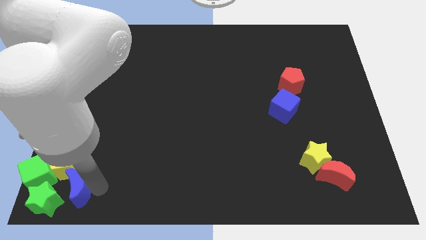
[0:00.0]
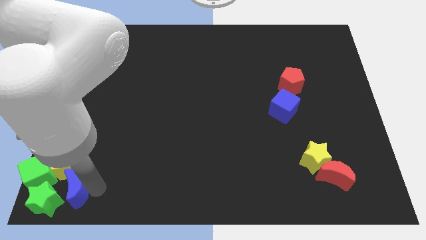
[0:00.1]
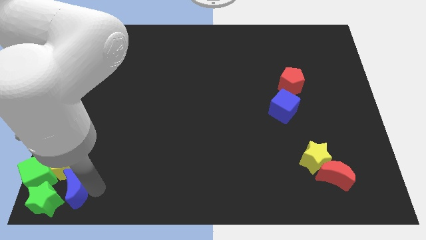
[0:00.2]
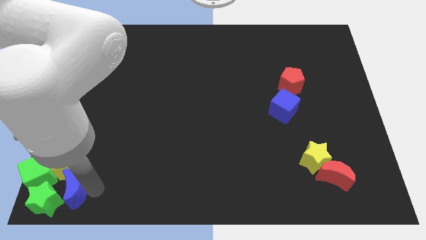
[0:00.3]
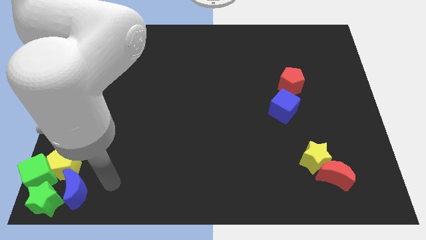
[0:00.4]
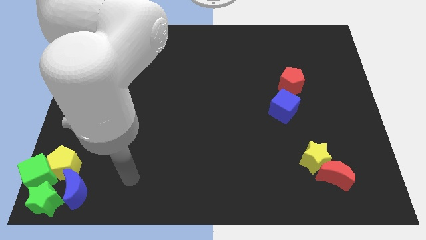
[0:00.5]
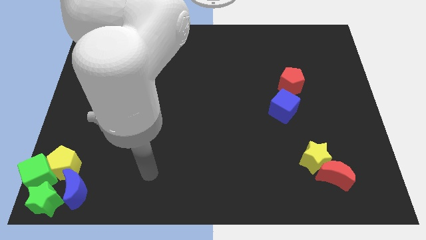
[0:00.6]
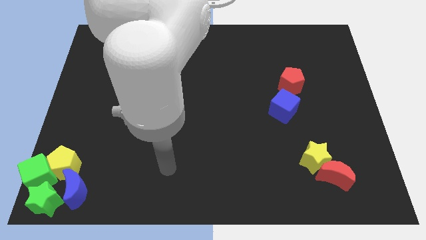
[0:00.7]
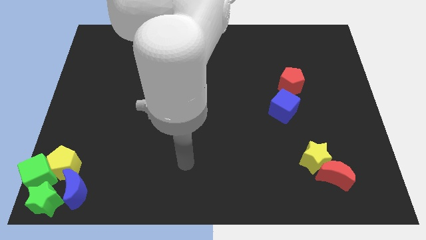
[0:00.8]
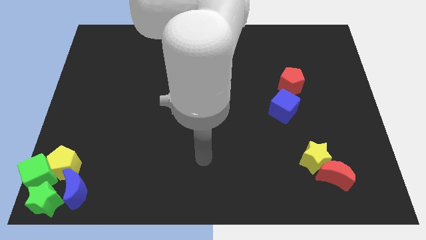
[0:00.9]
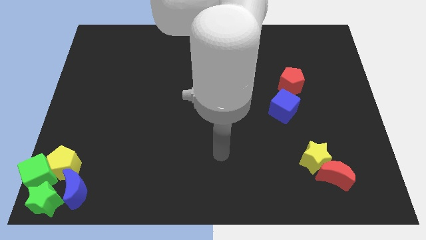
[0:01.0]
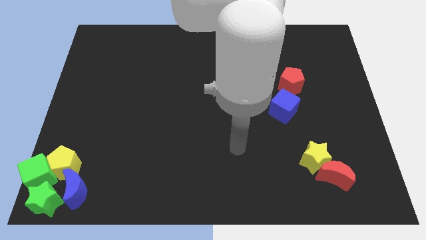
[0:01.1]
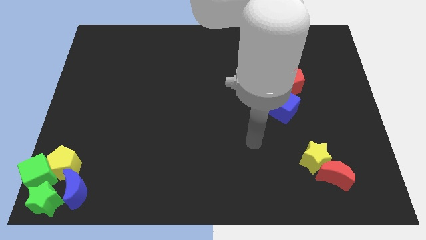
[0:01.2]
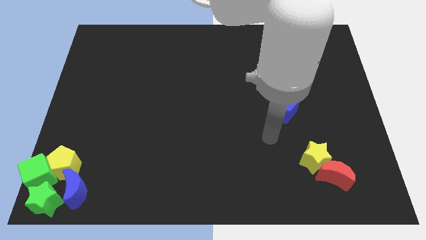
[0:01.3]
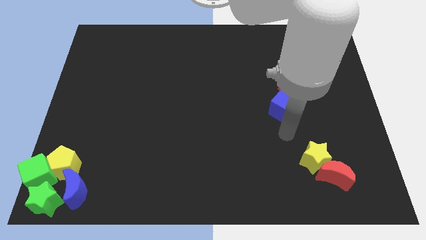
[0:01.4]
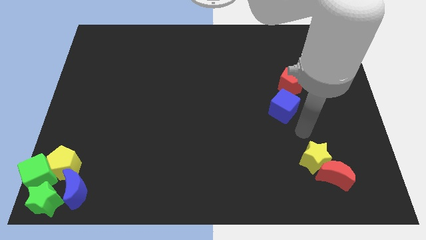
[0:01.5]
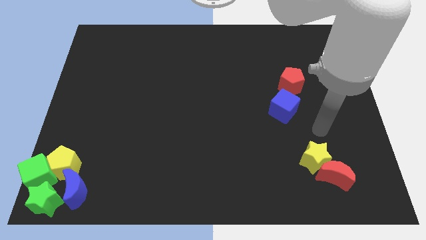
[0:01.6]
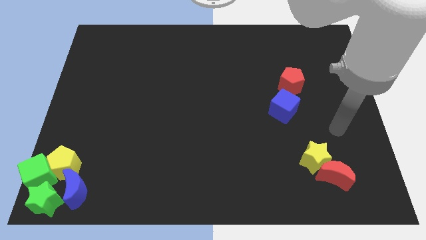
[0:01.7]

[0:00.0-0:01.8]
move your arm away from the blue crescent

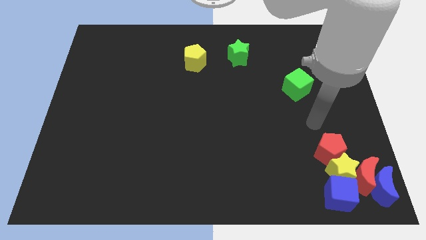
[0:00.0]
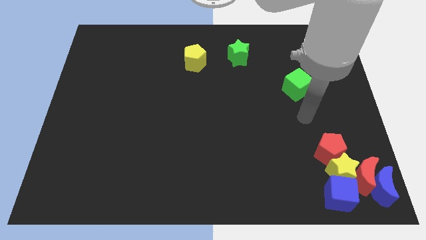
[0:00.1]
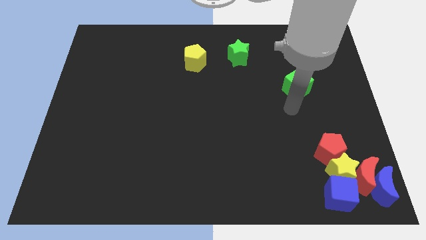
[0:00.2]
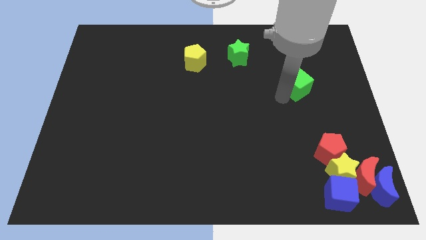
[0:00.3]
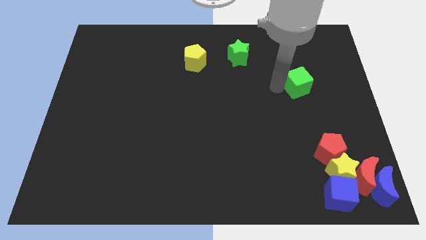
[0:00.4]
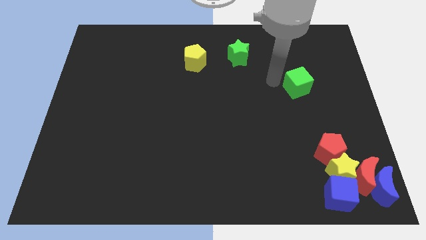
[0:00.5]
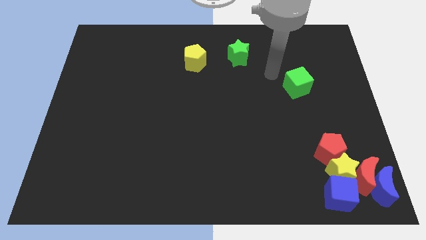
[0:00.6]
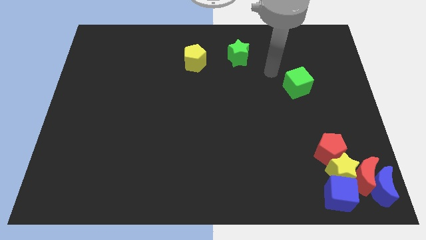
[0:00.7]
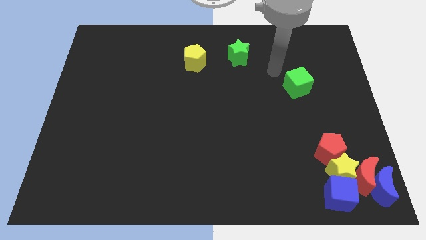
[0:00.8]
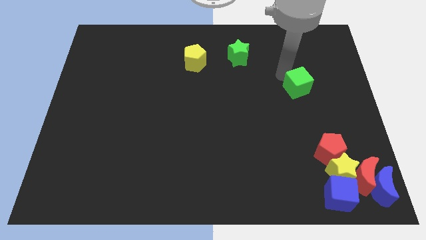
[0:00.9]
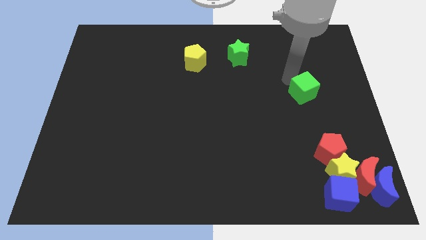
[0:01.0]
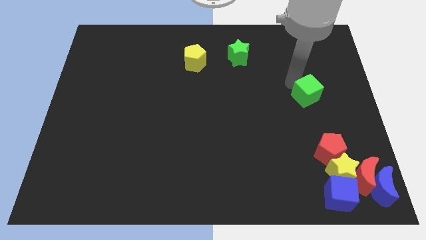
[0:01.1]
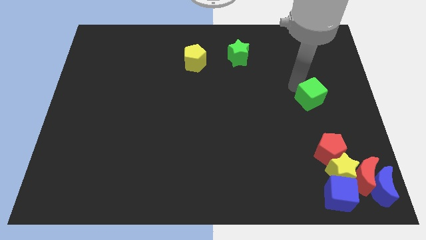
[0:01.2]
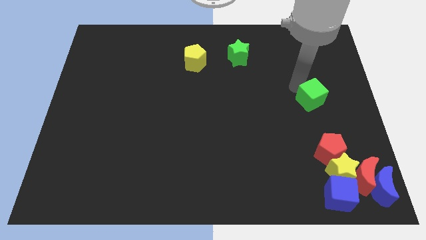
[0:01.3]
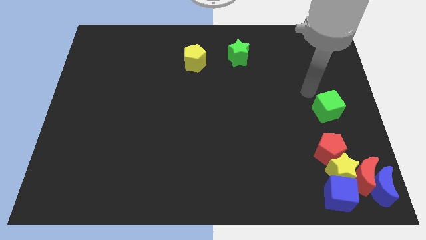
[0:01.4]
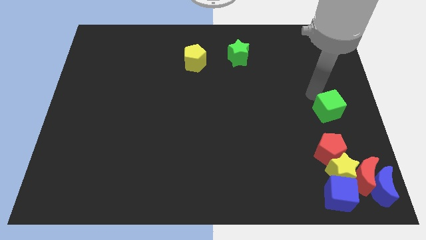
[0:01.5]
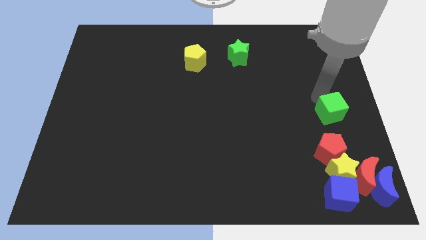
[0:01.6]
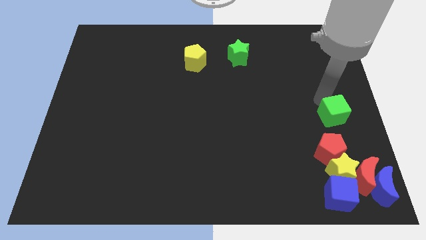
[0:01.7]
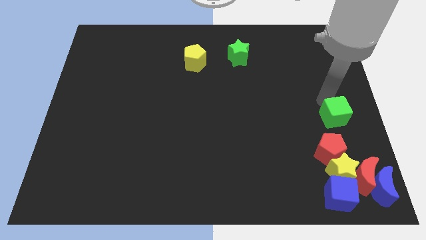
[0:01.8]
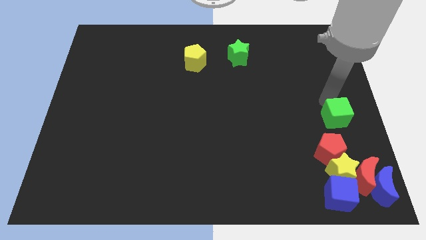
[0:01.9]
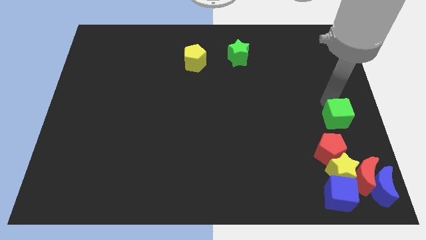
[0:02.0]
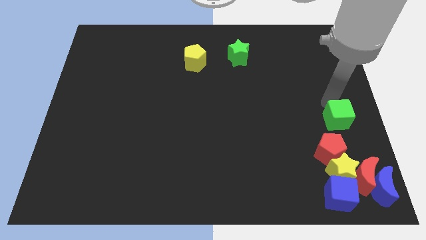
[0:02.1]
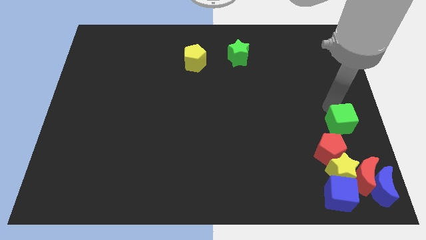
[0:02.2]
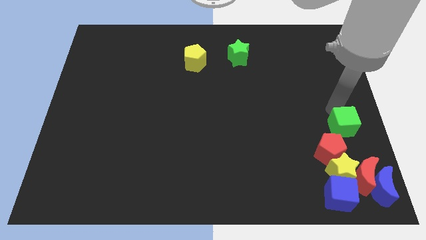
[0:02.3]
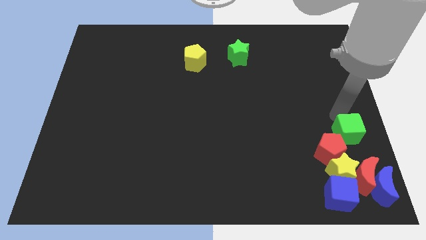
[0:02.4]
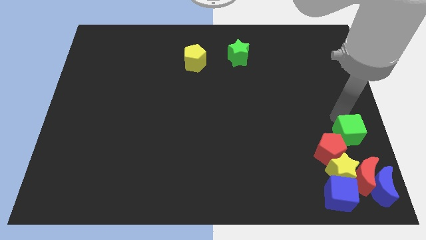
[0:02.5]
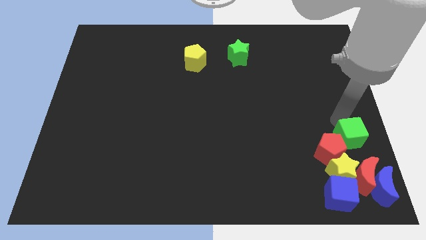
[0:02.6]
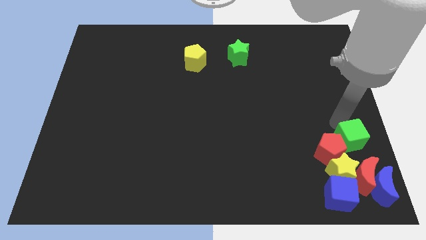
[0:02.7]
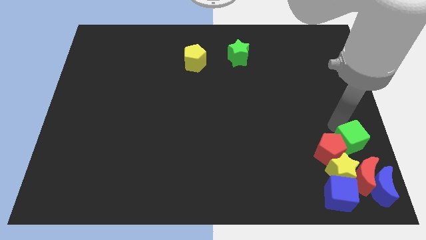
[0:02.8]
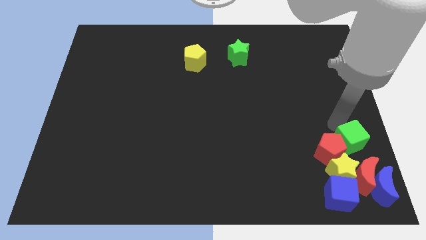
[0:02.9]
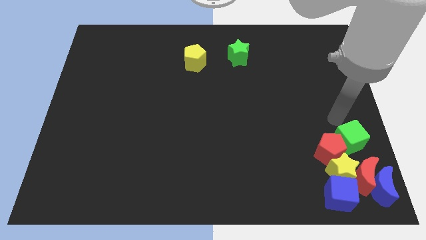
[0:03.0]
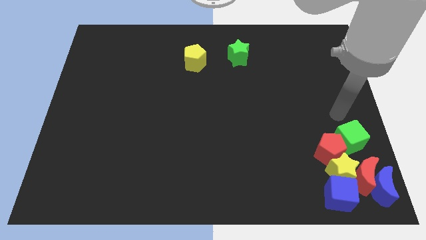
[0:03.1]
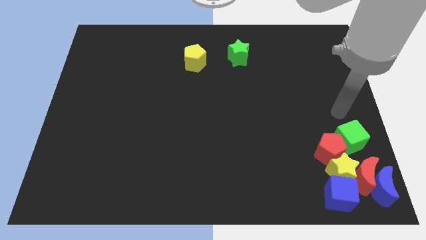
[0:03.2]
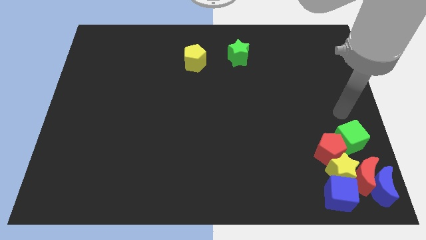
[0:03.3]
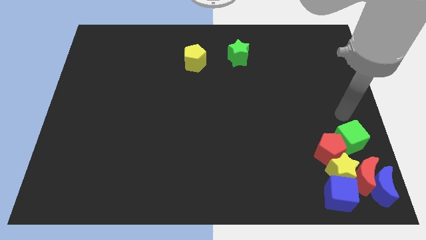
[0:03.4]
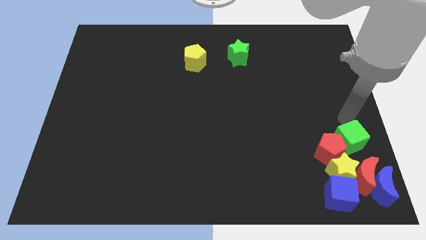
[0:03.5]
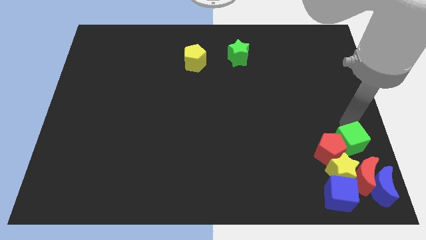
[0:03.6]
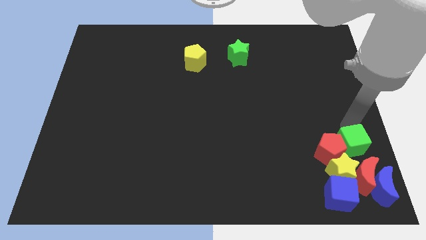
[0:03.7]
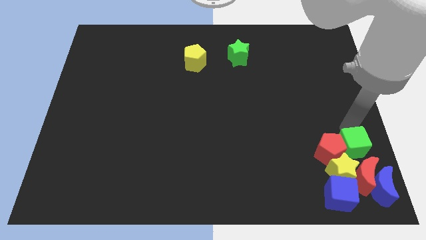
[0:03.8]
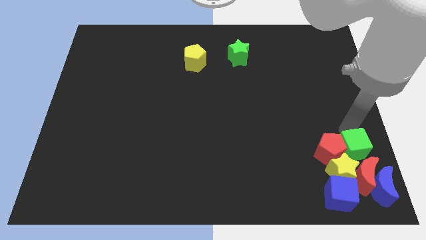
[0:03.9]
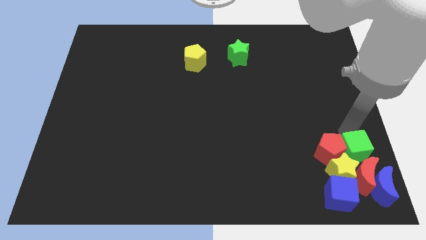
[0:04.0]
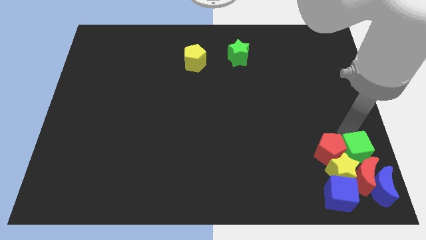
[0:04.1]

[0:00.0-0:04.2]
slide green cube to the right of red pentagon

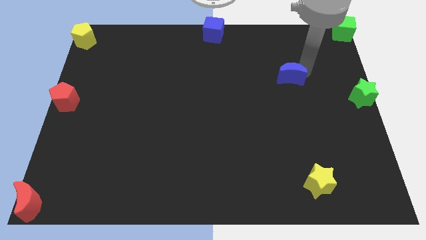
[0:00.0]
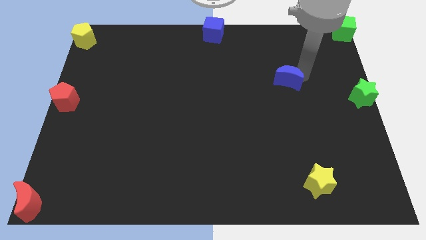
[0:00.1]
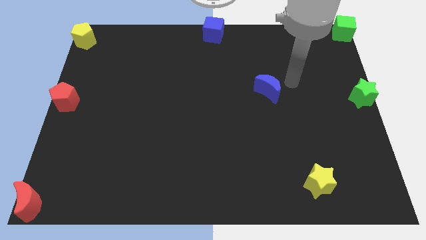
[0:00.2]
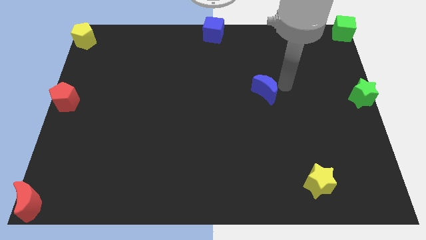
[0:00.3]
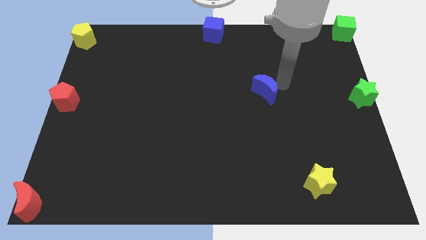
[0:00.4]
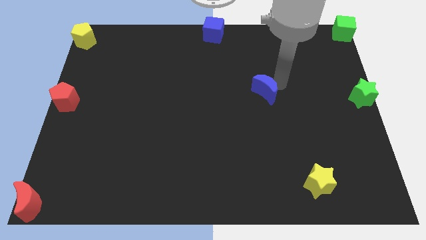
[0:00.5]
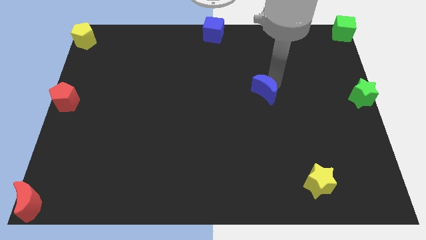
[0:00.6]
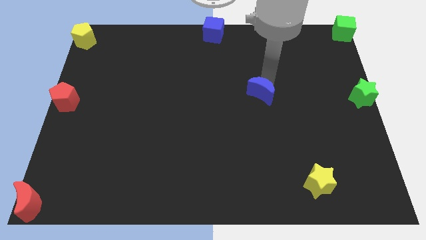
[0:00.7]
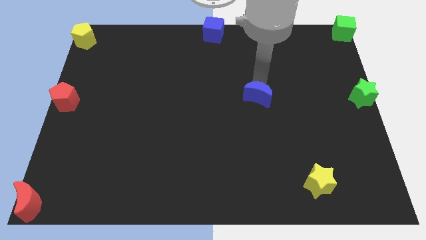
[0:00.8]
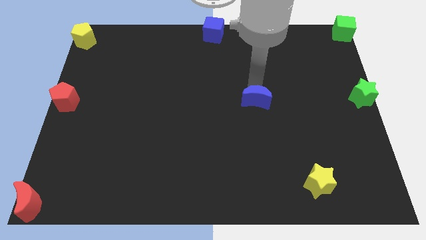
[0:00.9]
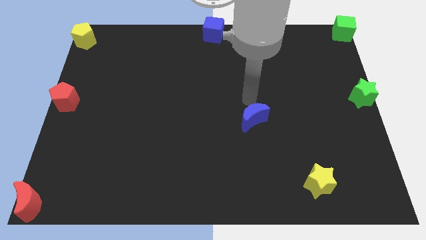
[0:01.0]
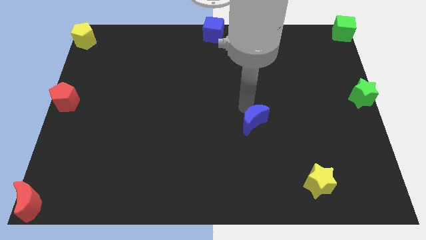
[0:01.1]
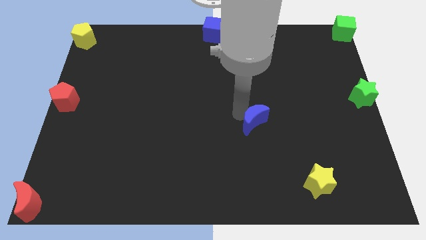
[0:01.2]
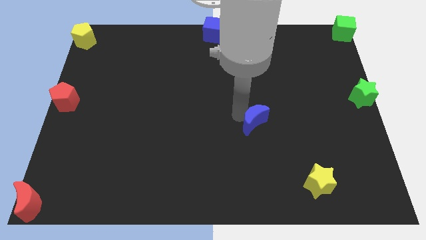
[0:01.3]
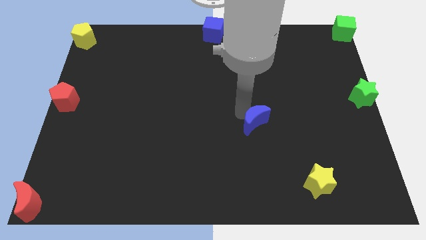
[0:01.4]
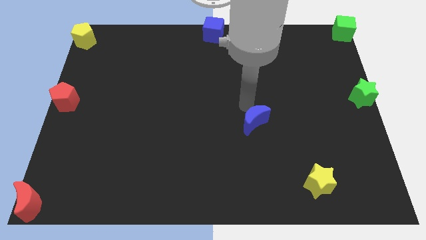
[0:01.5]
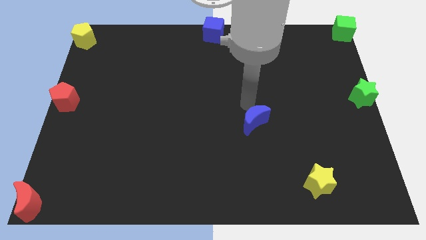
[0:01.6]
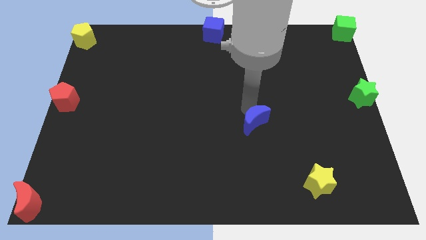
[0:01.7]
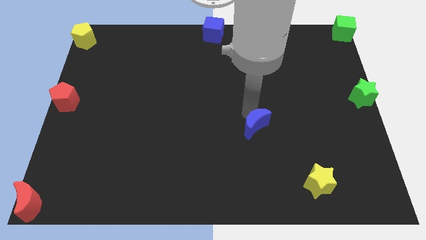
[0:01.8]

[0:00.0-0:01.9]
push blue crescent above yellow star

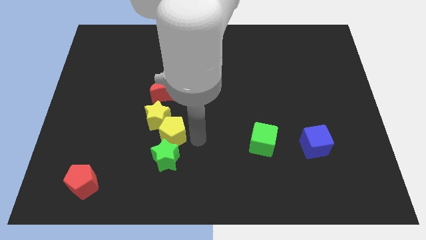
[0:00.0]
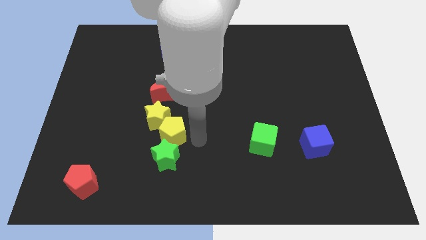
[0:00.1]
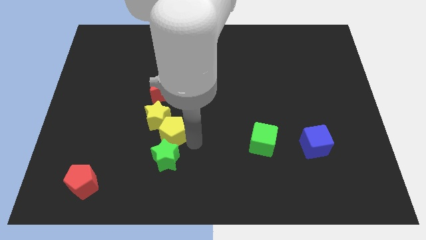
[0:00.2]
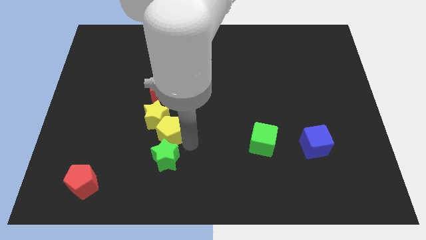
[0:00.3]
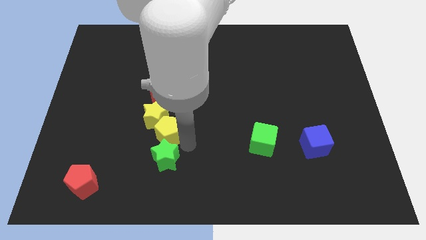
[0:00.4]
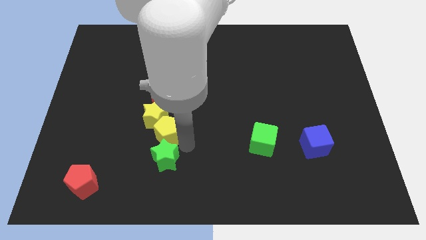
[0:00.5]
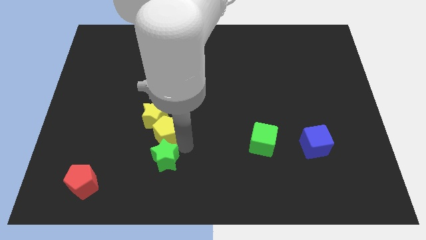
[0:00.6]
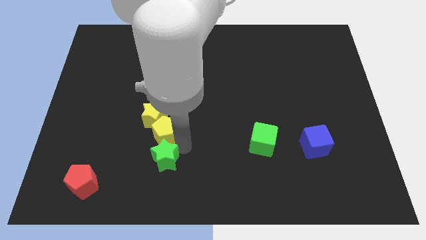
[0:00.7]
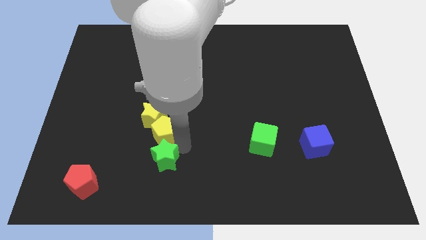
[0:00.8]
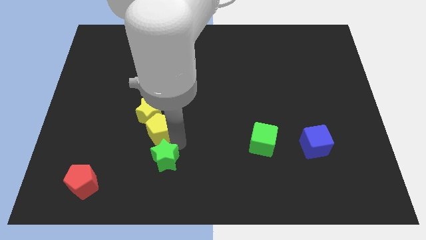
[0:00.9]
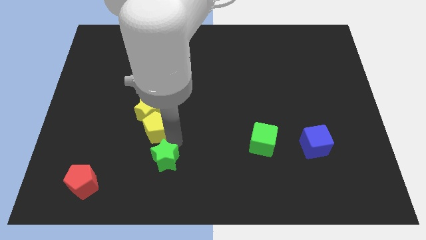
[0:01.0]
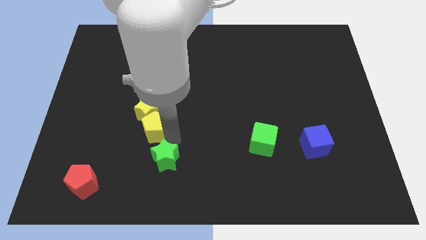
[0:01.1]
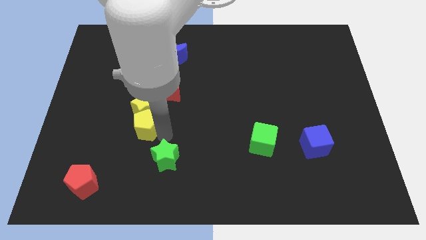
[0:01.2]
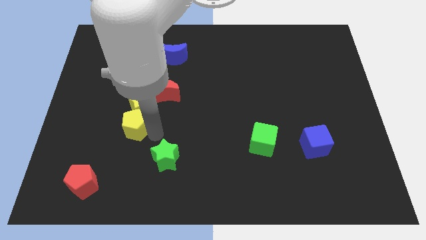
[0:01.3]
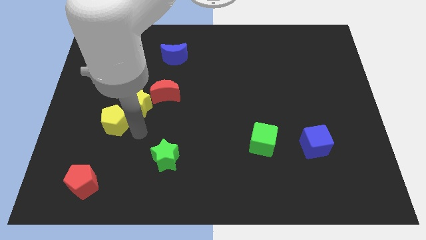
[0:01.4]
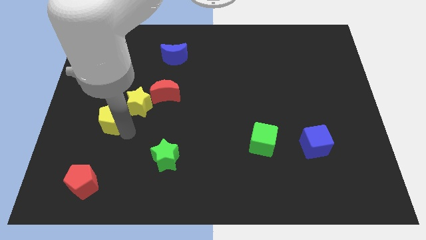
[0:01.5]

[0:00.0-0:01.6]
move the yellow pentagon slightly left
